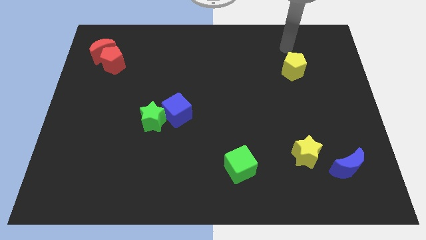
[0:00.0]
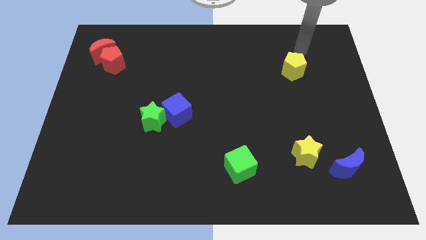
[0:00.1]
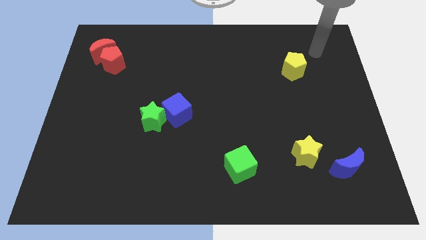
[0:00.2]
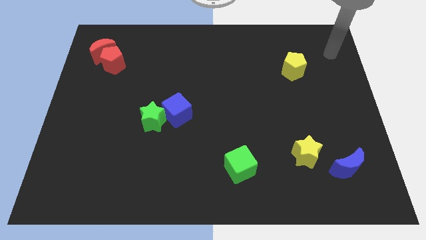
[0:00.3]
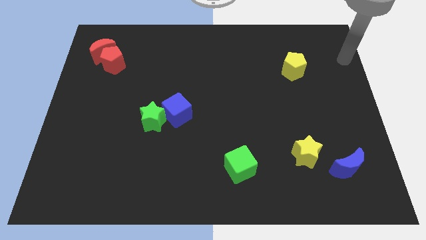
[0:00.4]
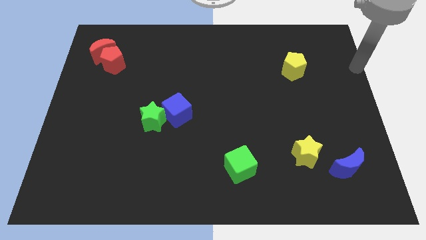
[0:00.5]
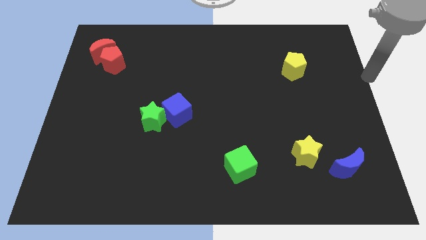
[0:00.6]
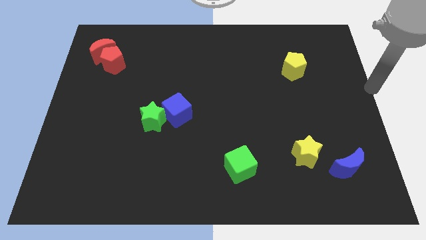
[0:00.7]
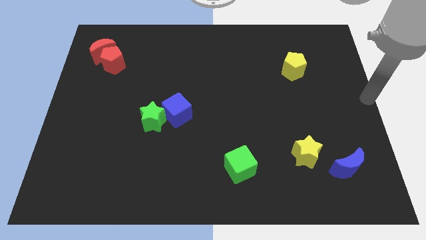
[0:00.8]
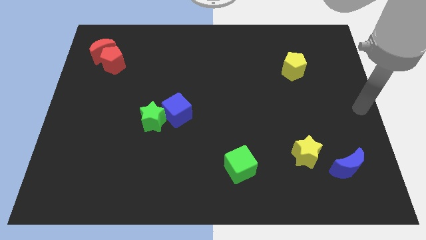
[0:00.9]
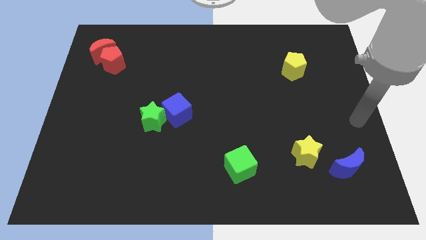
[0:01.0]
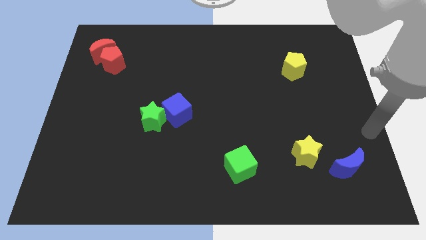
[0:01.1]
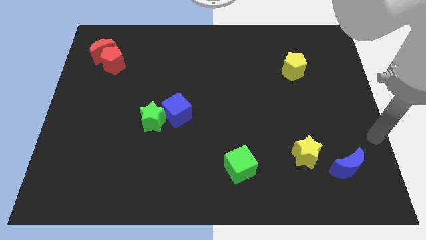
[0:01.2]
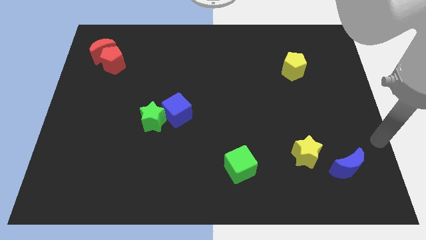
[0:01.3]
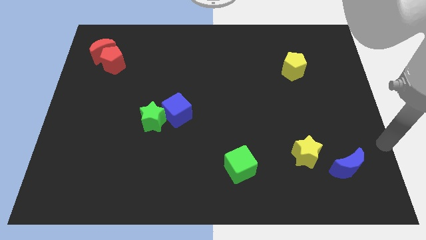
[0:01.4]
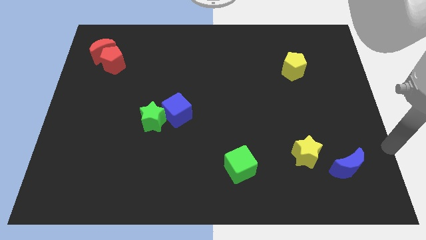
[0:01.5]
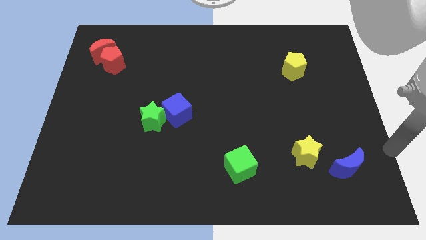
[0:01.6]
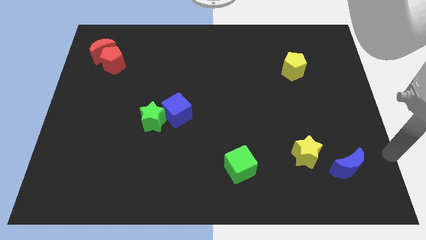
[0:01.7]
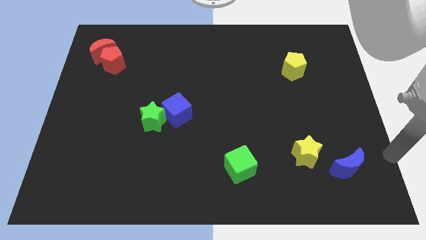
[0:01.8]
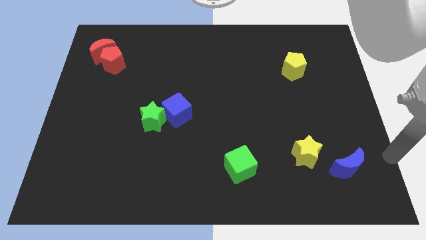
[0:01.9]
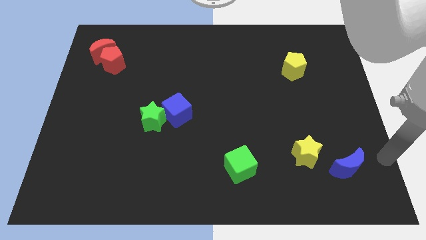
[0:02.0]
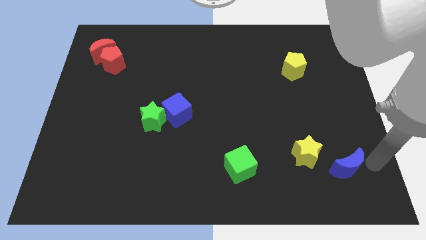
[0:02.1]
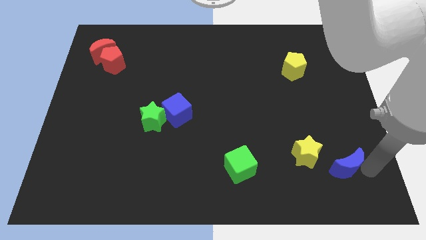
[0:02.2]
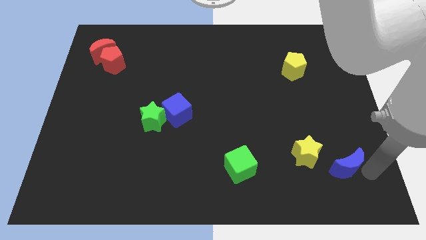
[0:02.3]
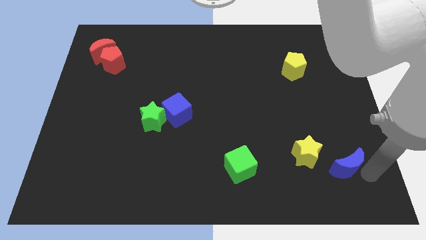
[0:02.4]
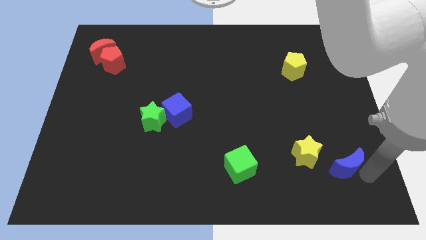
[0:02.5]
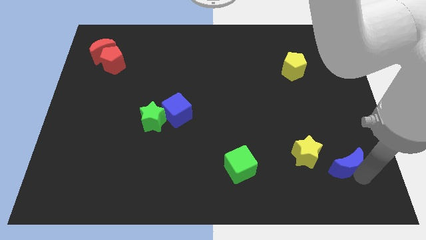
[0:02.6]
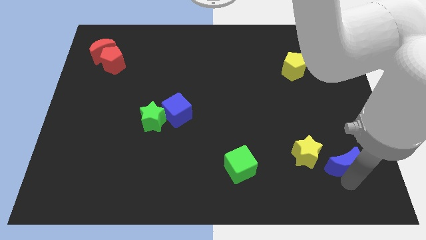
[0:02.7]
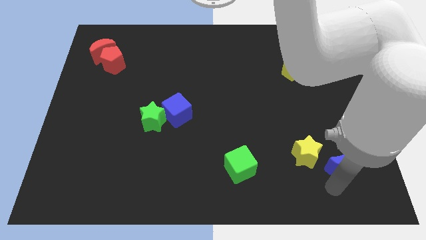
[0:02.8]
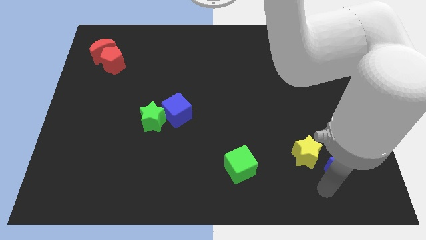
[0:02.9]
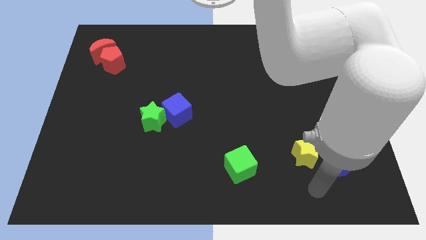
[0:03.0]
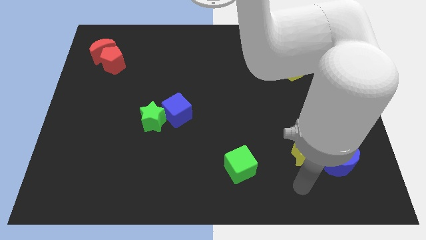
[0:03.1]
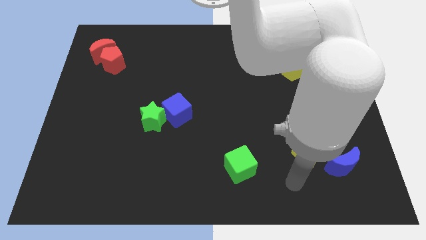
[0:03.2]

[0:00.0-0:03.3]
place your arm at the bottom of the yellow star

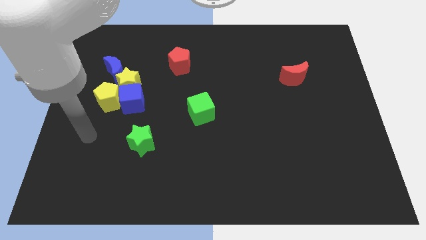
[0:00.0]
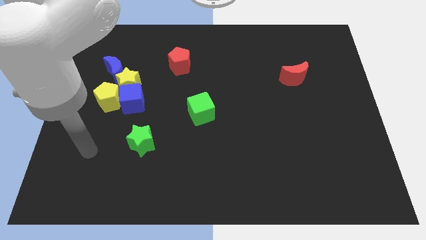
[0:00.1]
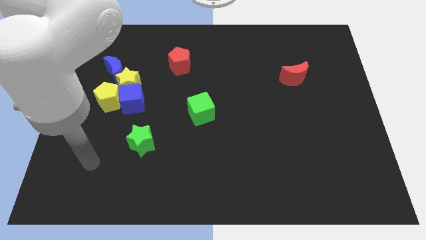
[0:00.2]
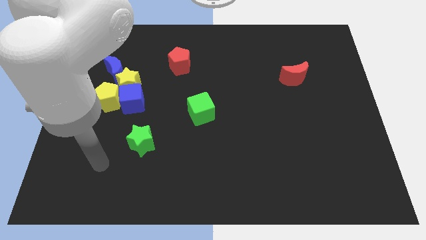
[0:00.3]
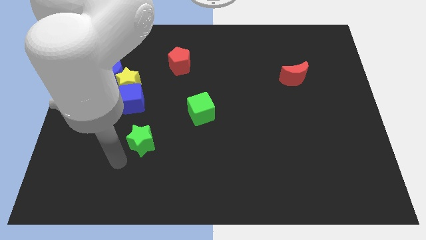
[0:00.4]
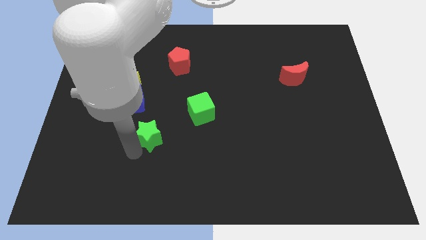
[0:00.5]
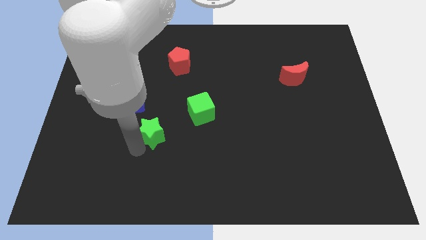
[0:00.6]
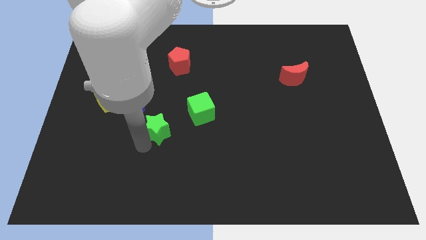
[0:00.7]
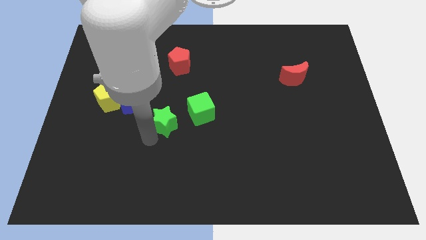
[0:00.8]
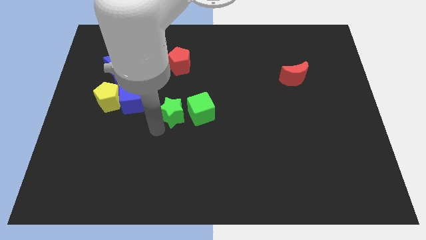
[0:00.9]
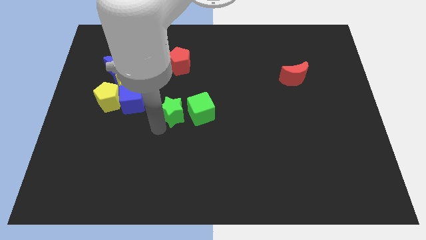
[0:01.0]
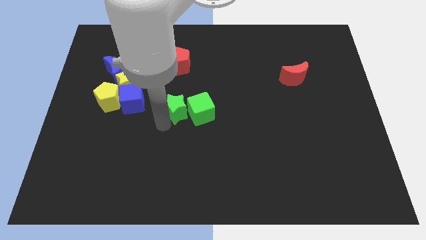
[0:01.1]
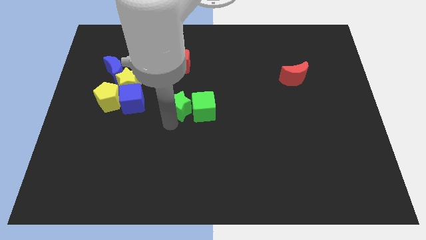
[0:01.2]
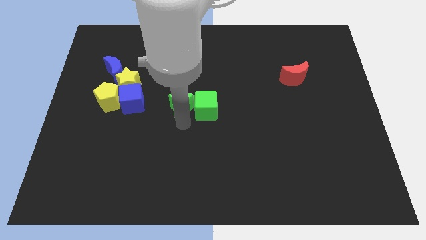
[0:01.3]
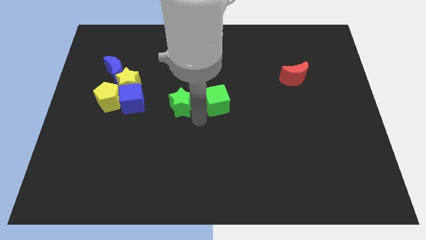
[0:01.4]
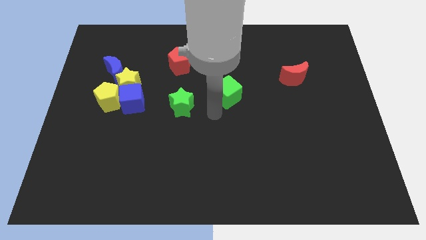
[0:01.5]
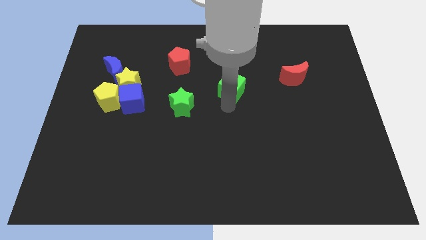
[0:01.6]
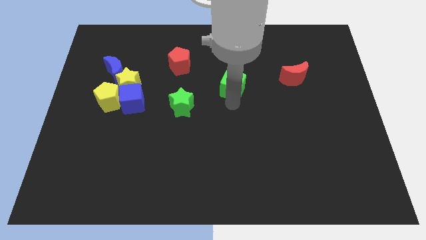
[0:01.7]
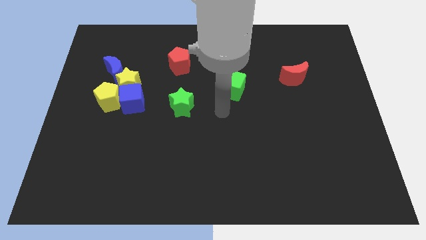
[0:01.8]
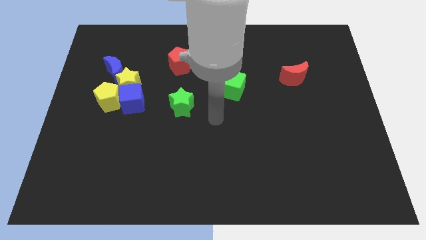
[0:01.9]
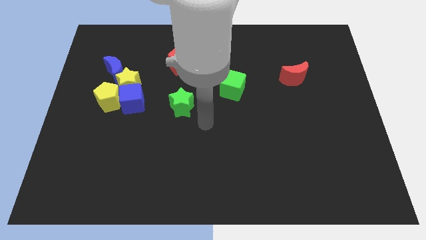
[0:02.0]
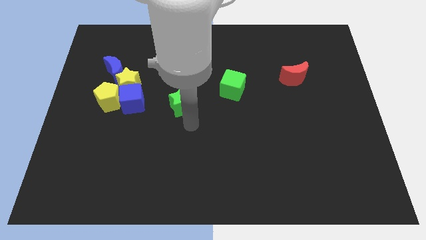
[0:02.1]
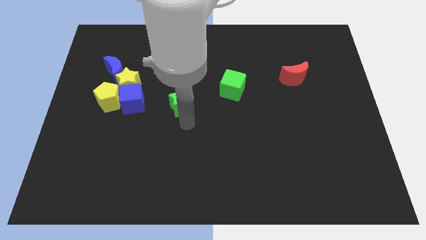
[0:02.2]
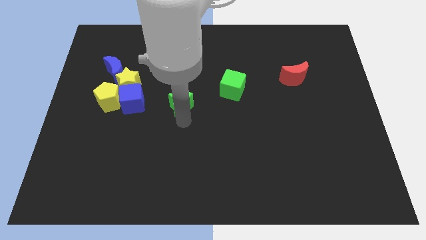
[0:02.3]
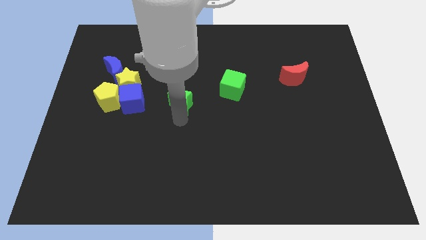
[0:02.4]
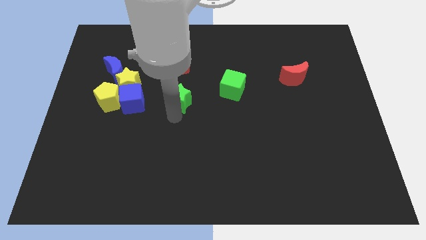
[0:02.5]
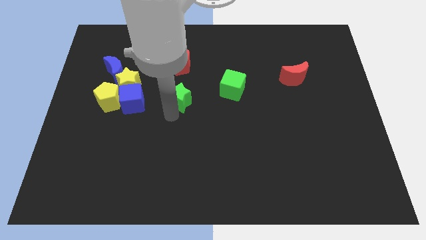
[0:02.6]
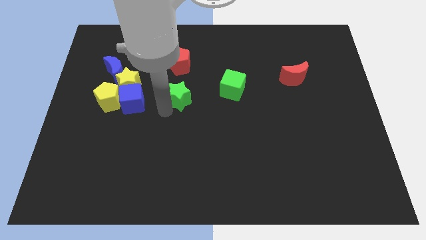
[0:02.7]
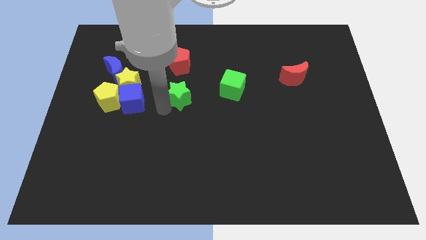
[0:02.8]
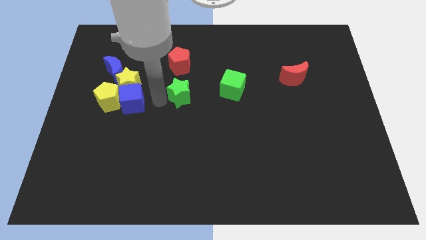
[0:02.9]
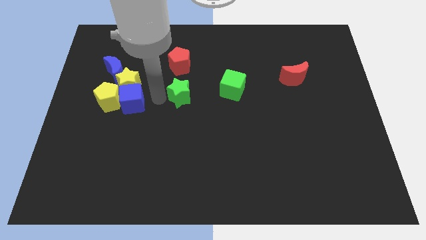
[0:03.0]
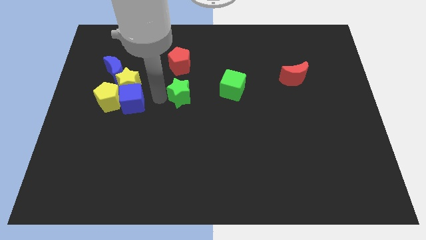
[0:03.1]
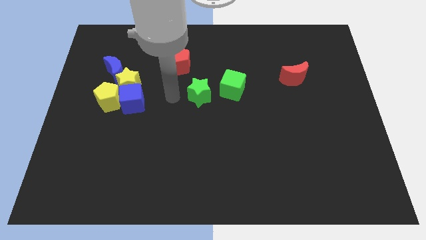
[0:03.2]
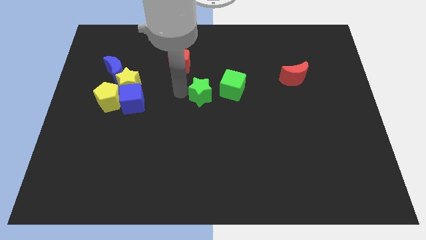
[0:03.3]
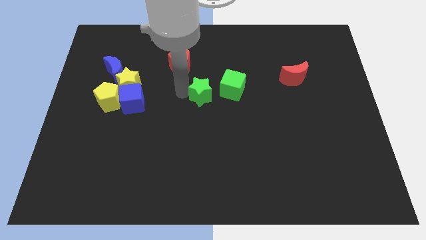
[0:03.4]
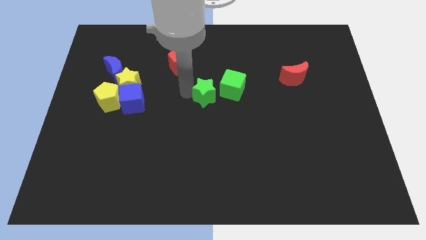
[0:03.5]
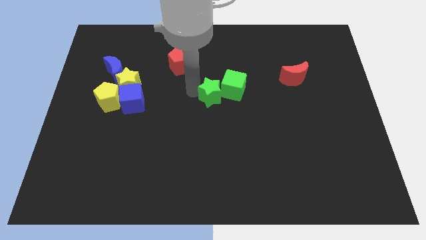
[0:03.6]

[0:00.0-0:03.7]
move the green star and the green cube slightly away from the center of the board

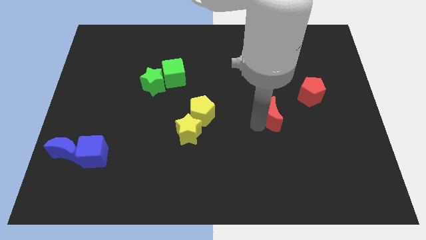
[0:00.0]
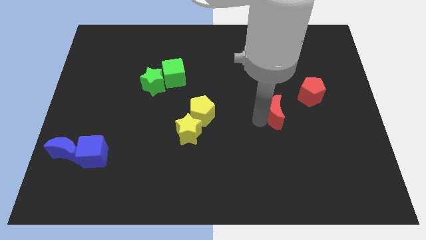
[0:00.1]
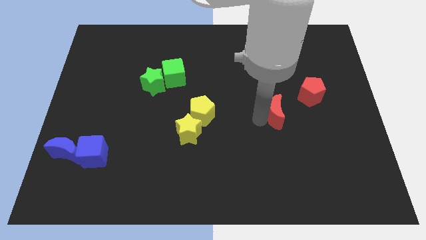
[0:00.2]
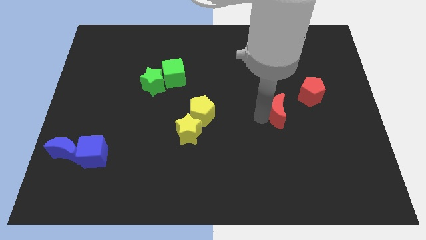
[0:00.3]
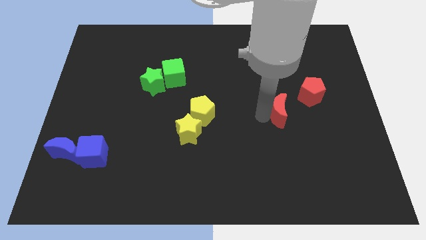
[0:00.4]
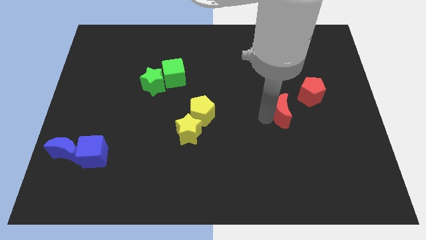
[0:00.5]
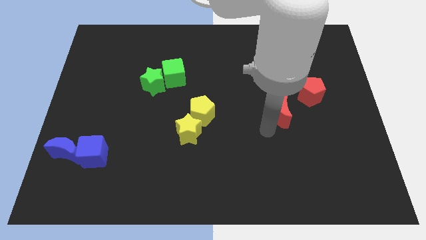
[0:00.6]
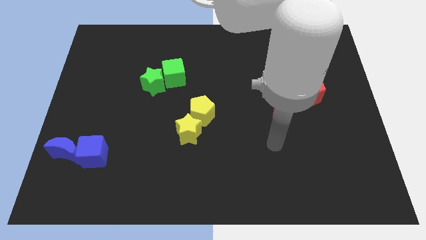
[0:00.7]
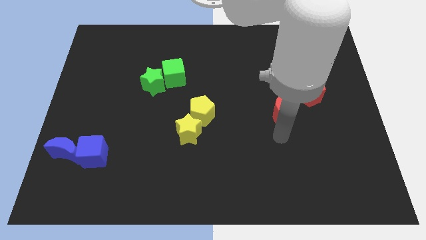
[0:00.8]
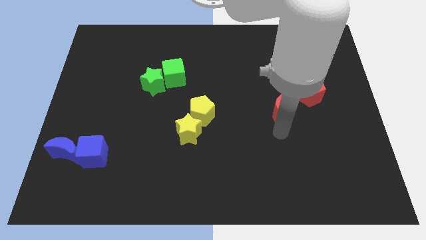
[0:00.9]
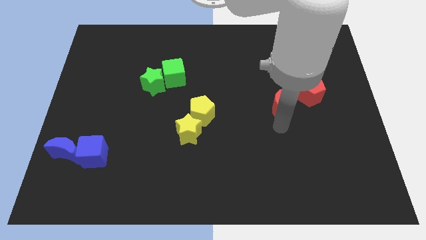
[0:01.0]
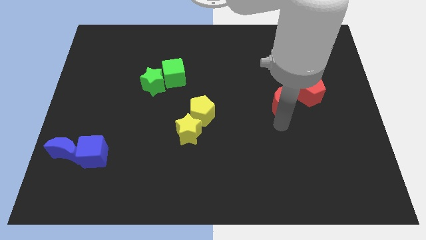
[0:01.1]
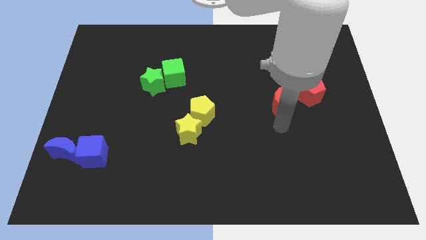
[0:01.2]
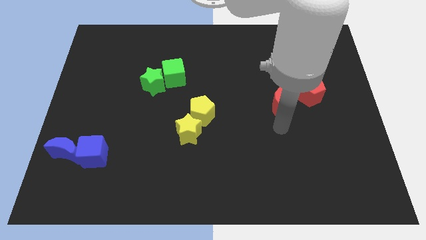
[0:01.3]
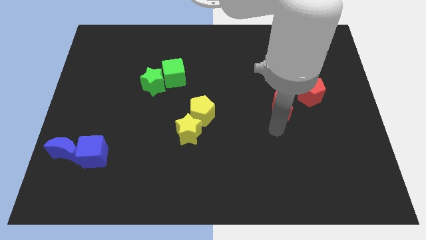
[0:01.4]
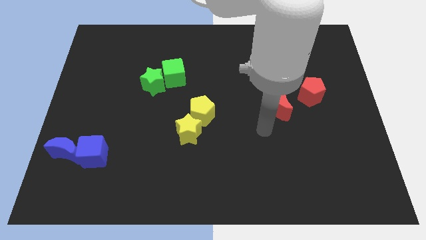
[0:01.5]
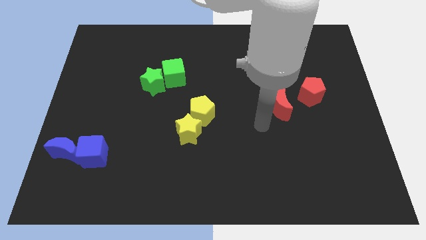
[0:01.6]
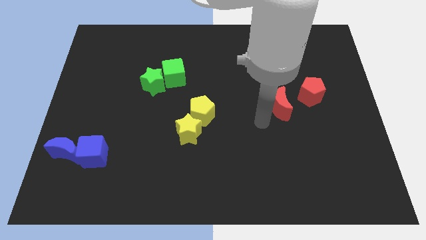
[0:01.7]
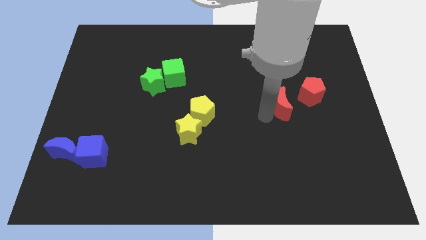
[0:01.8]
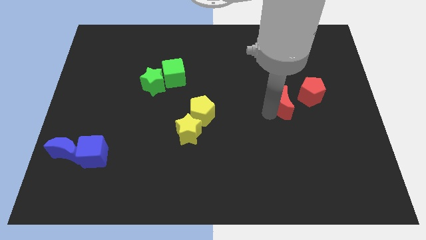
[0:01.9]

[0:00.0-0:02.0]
place the red moon close to the red pentagon
